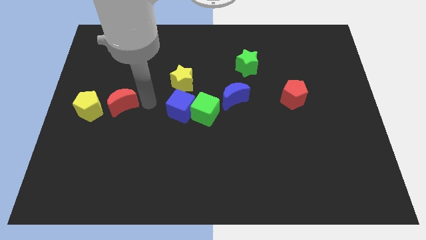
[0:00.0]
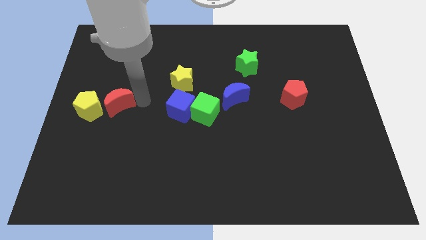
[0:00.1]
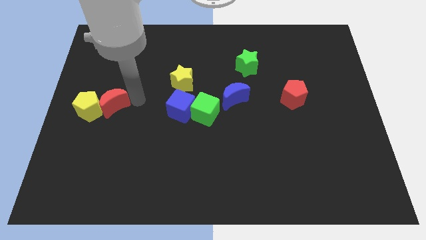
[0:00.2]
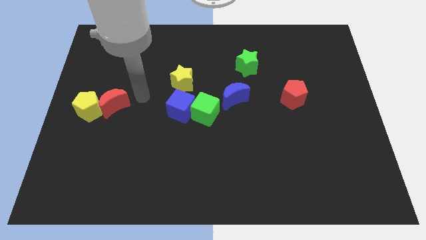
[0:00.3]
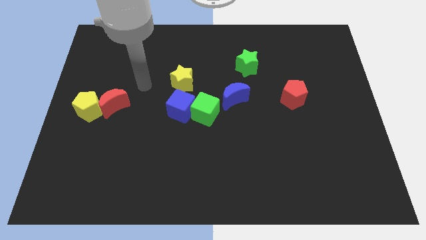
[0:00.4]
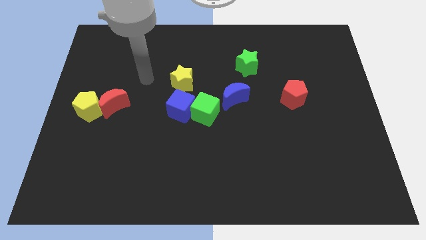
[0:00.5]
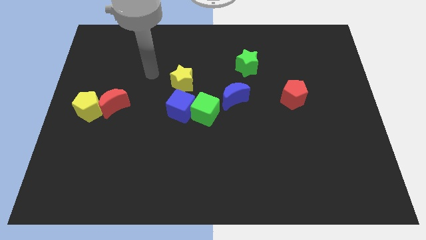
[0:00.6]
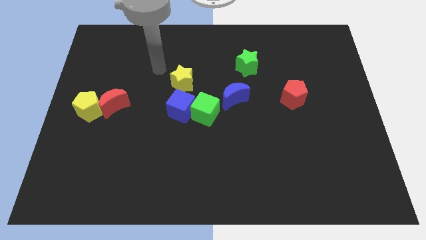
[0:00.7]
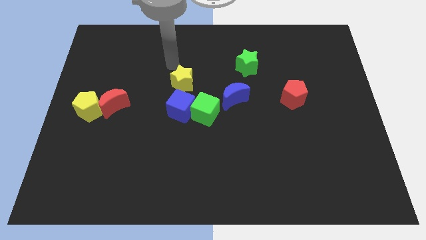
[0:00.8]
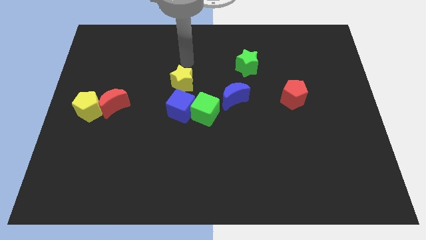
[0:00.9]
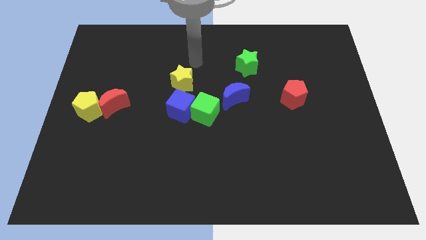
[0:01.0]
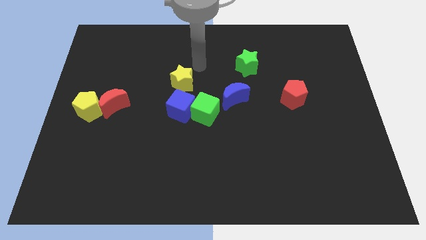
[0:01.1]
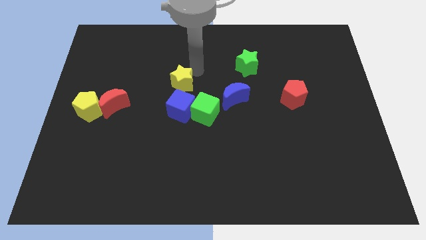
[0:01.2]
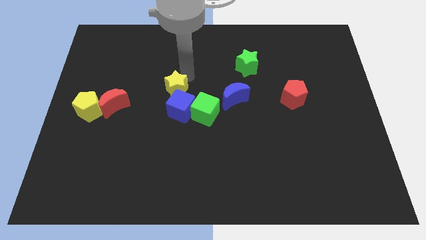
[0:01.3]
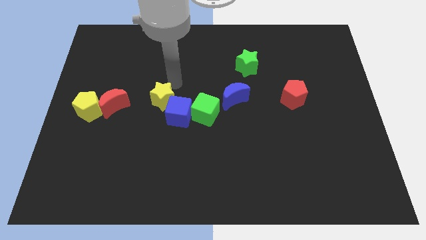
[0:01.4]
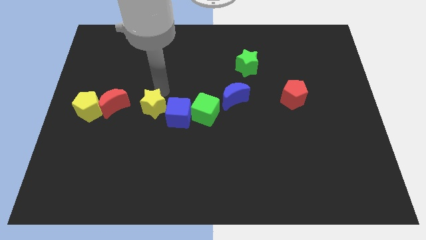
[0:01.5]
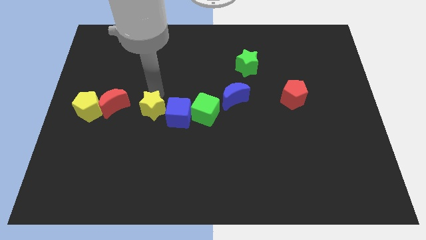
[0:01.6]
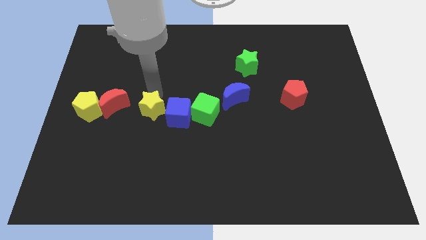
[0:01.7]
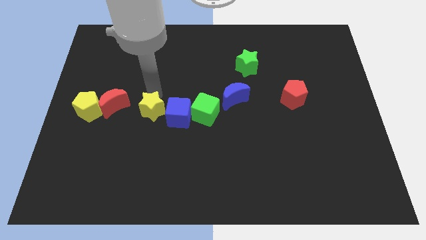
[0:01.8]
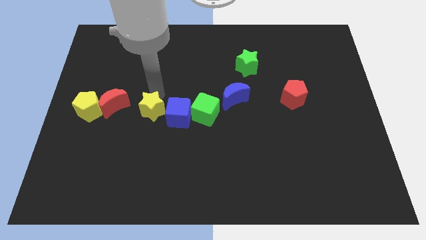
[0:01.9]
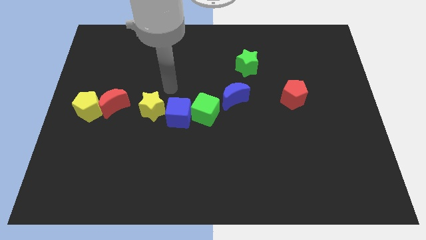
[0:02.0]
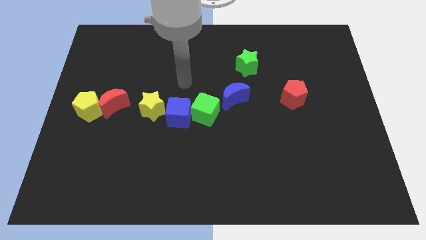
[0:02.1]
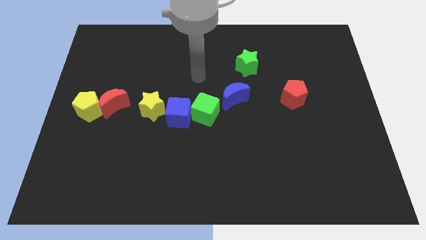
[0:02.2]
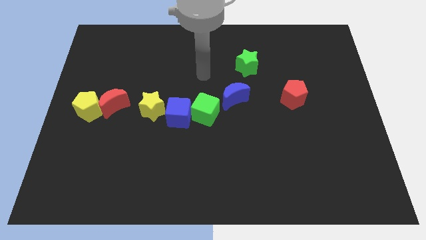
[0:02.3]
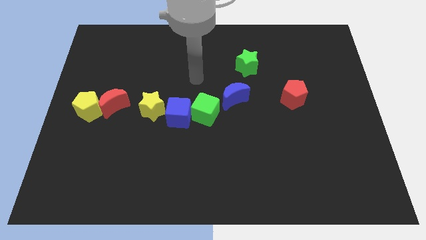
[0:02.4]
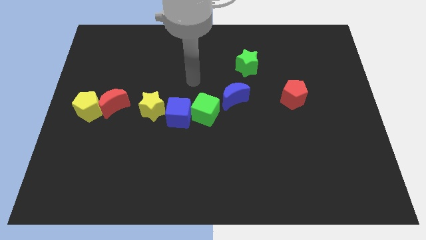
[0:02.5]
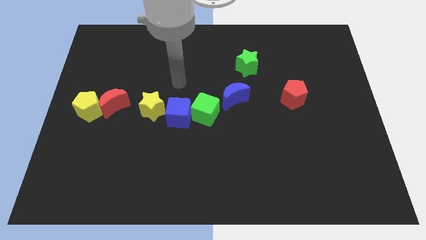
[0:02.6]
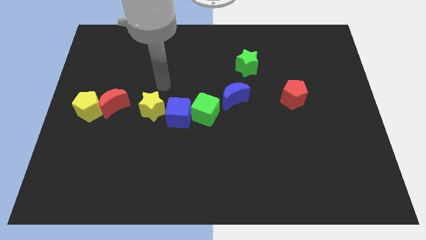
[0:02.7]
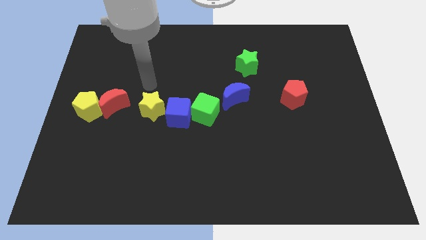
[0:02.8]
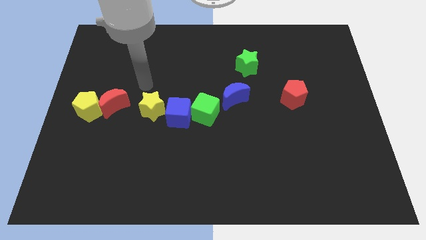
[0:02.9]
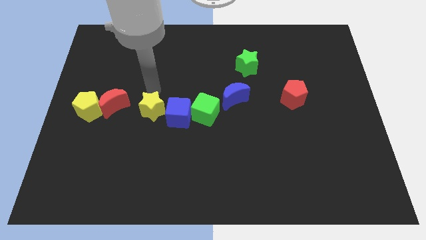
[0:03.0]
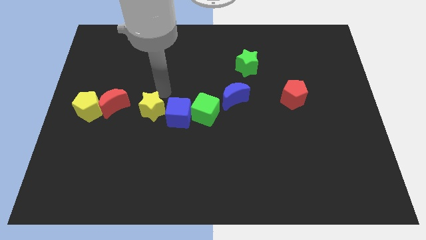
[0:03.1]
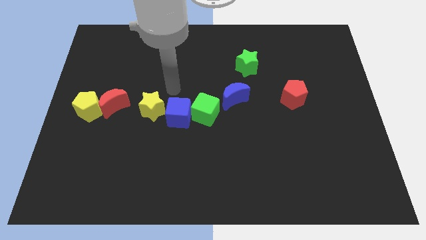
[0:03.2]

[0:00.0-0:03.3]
place the yellow star to the left of blue cube

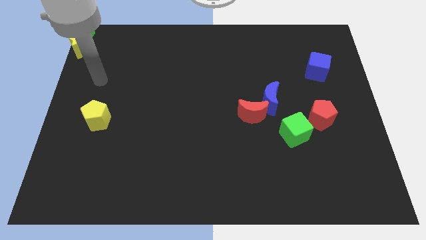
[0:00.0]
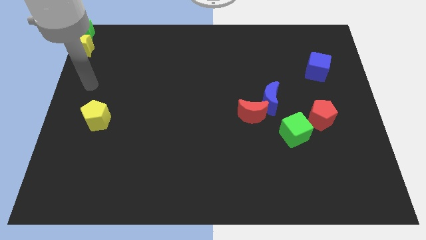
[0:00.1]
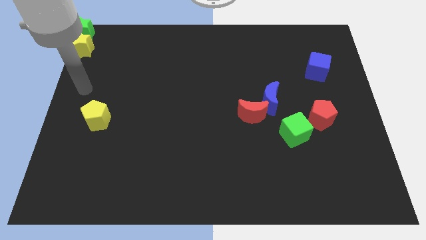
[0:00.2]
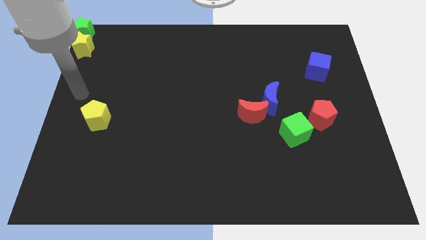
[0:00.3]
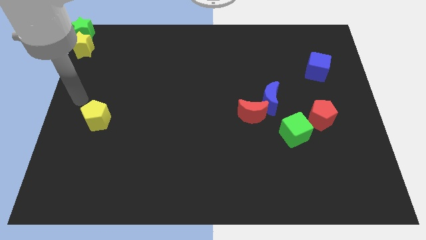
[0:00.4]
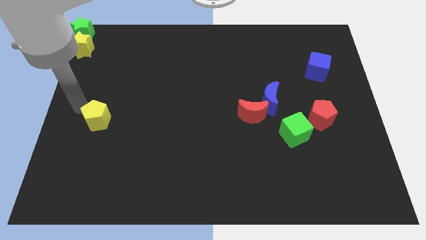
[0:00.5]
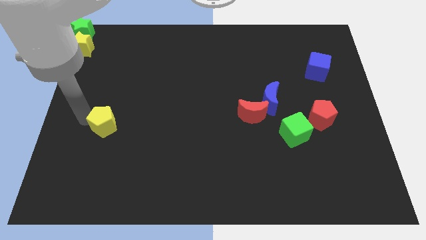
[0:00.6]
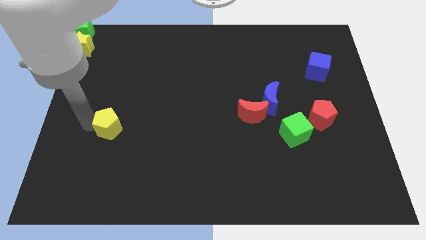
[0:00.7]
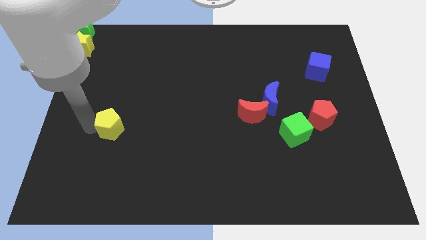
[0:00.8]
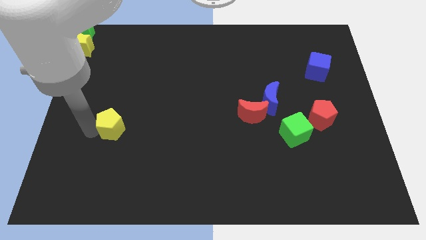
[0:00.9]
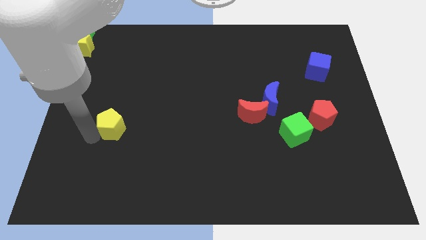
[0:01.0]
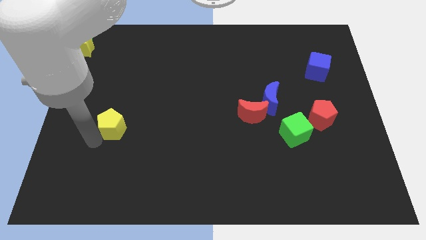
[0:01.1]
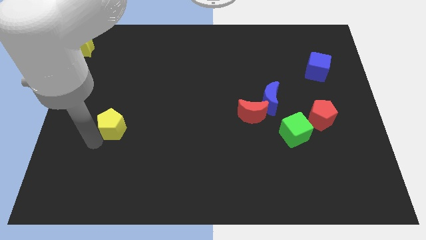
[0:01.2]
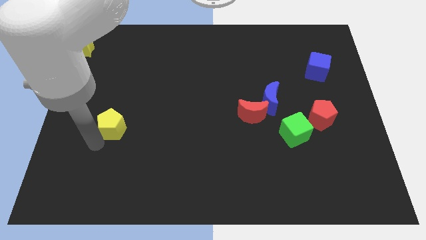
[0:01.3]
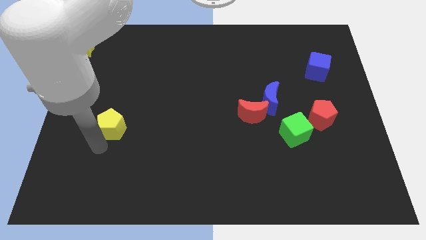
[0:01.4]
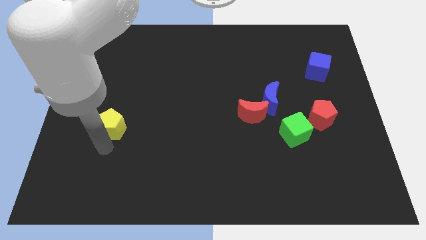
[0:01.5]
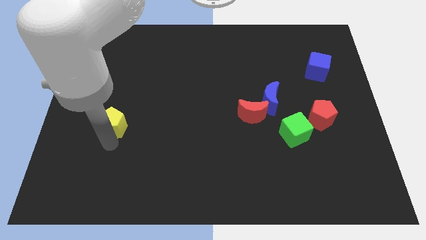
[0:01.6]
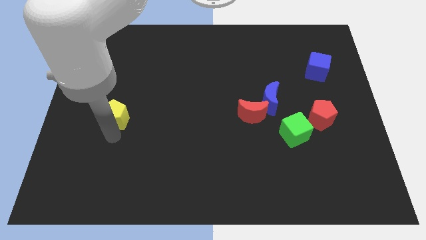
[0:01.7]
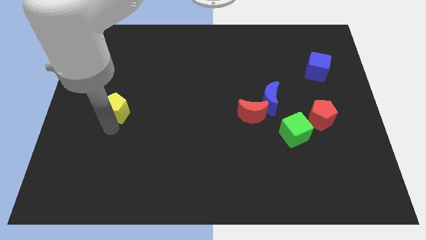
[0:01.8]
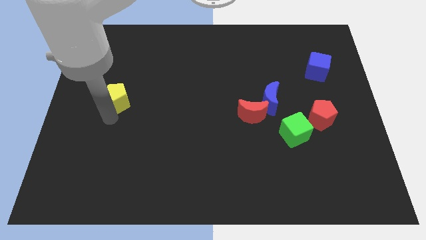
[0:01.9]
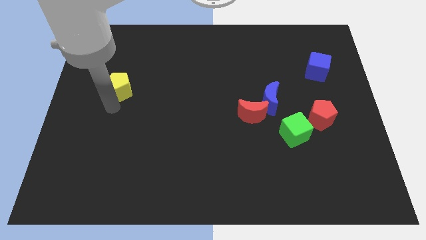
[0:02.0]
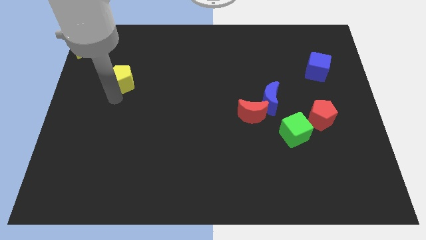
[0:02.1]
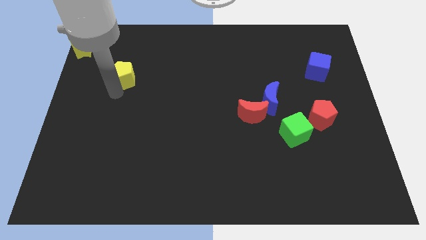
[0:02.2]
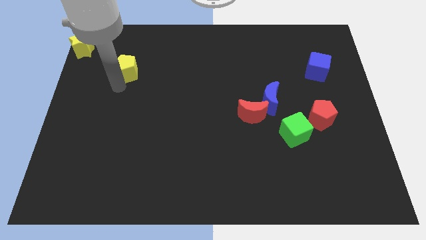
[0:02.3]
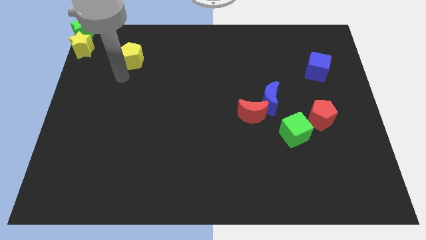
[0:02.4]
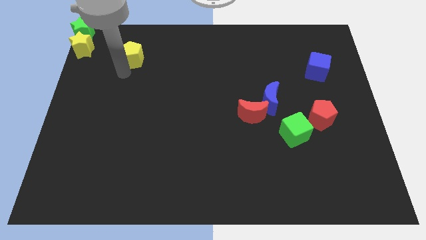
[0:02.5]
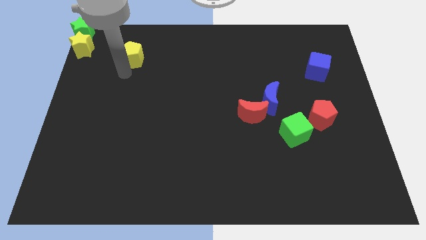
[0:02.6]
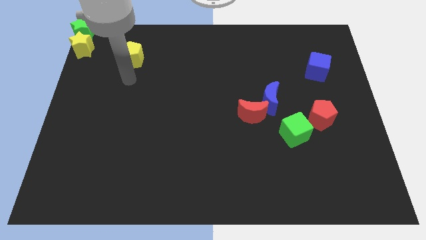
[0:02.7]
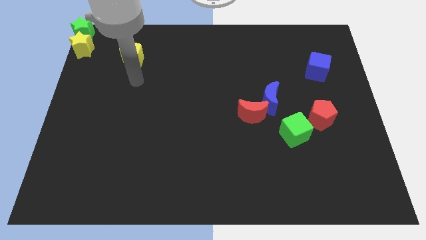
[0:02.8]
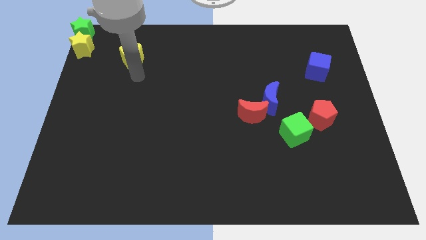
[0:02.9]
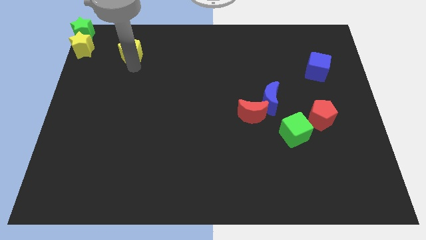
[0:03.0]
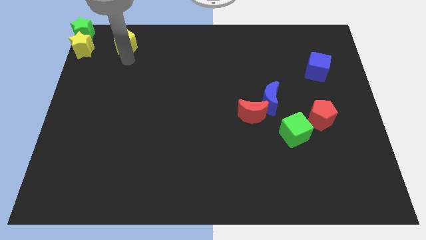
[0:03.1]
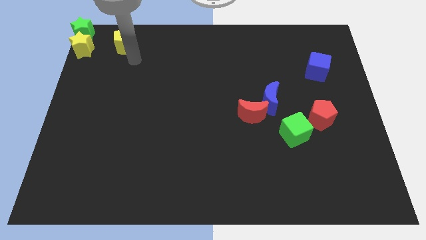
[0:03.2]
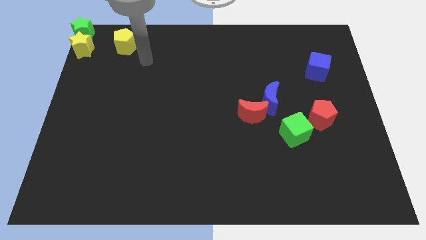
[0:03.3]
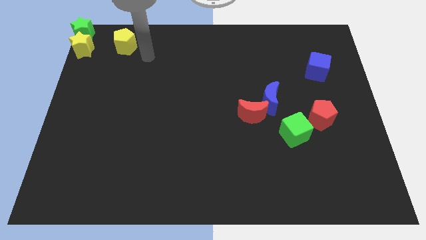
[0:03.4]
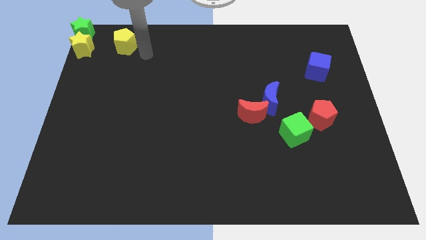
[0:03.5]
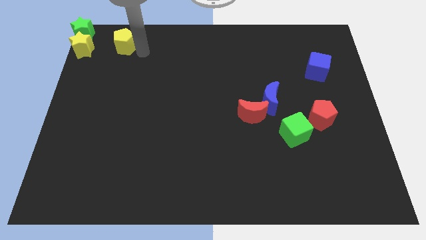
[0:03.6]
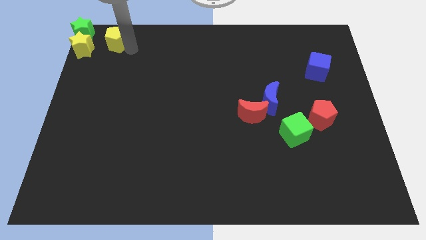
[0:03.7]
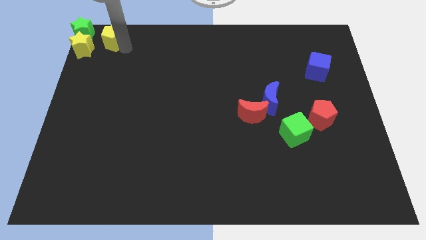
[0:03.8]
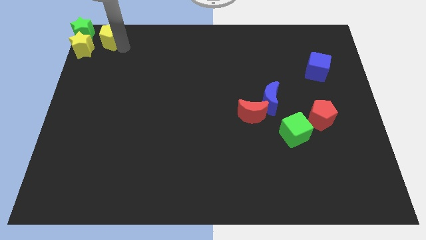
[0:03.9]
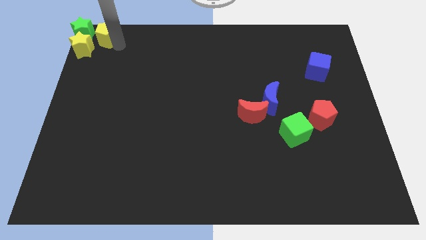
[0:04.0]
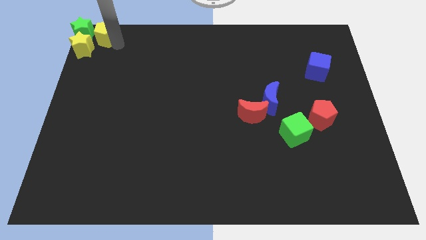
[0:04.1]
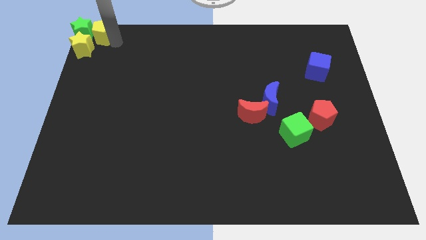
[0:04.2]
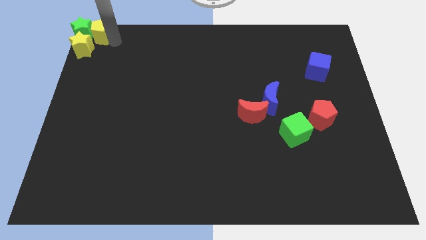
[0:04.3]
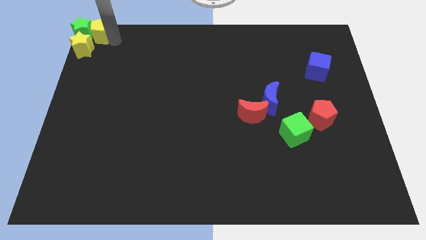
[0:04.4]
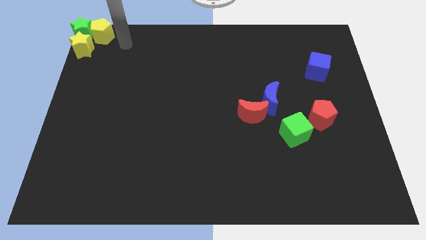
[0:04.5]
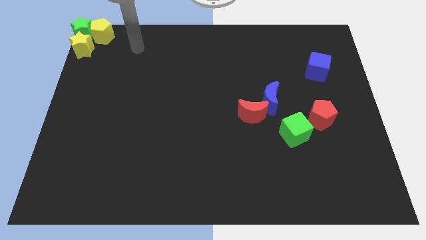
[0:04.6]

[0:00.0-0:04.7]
move the yellow pentagon to the right side of the green star

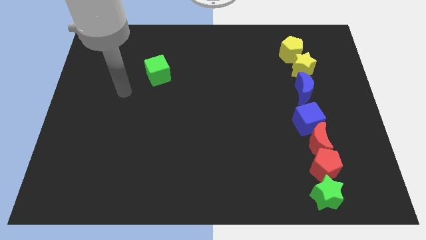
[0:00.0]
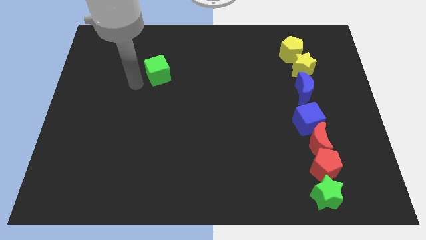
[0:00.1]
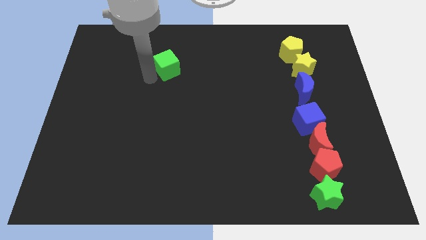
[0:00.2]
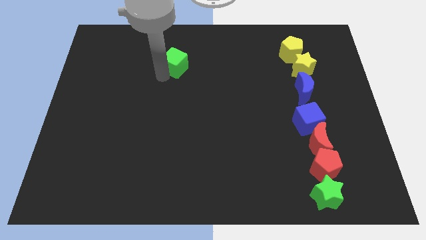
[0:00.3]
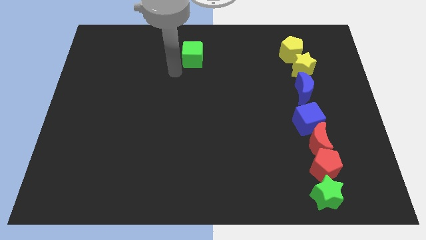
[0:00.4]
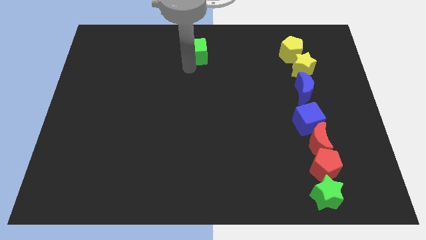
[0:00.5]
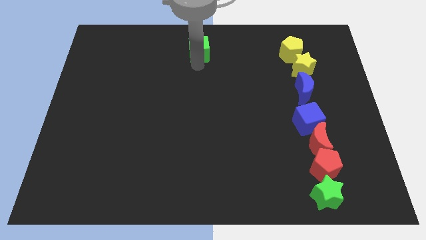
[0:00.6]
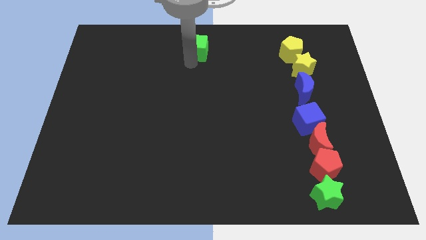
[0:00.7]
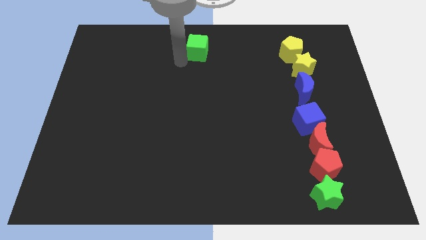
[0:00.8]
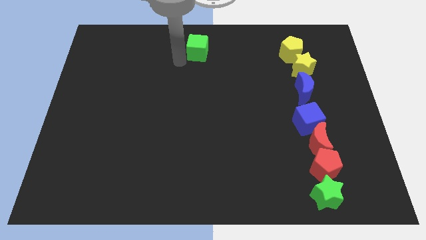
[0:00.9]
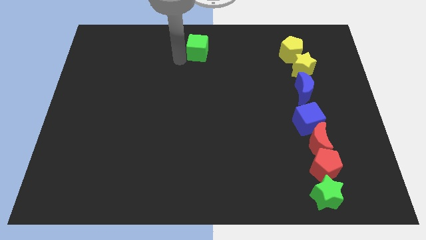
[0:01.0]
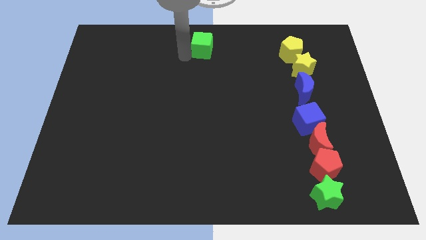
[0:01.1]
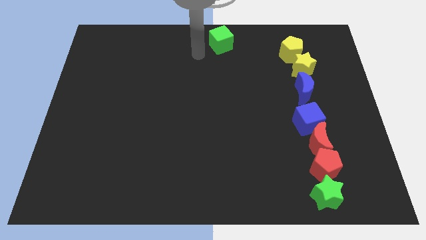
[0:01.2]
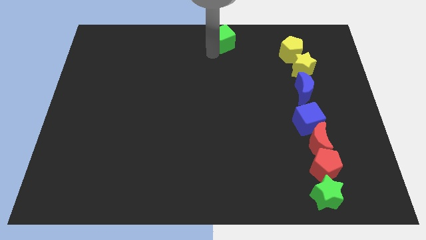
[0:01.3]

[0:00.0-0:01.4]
move the green cube to the top center of the board
